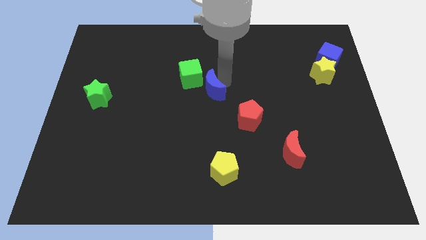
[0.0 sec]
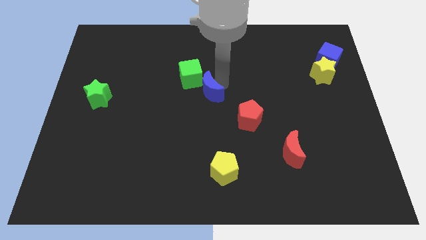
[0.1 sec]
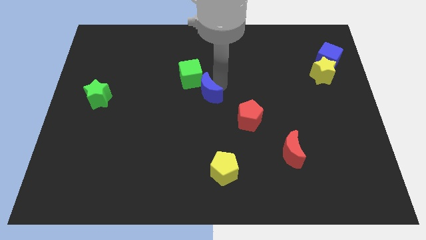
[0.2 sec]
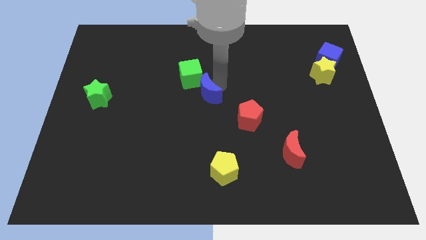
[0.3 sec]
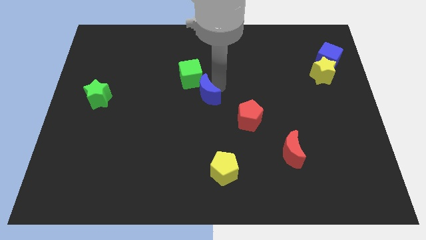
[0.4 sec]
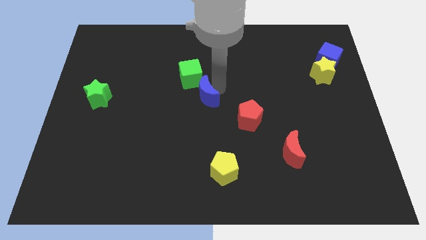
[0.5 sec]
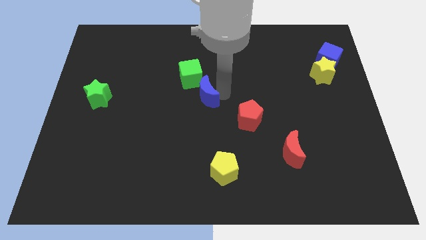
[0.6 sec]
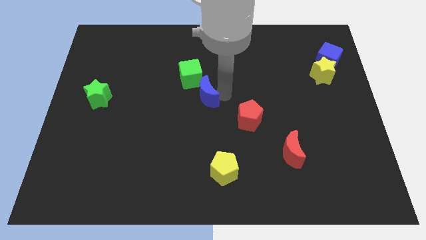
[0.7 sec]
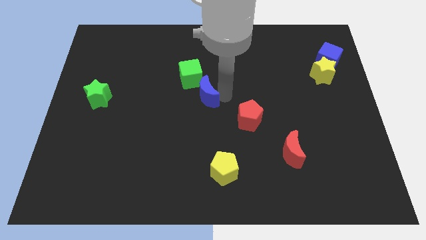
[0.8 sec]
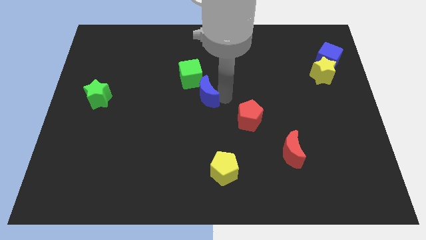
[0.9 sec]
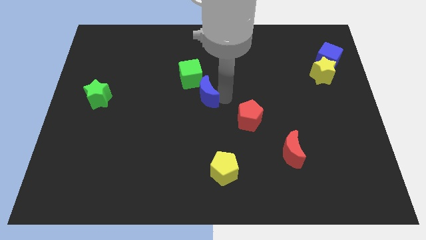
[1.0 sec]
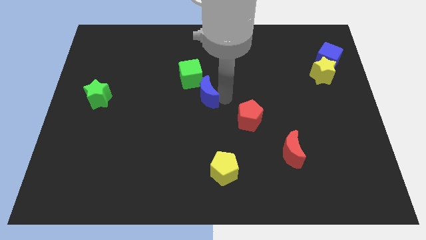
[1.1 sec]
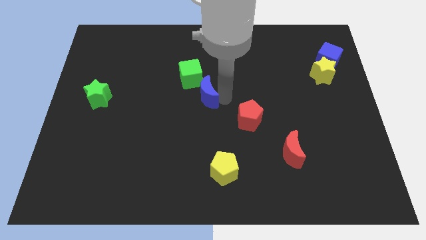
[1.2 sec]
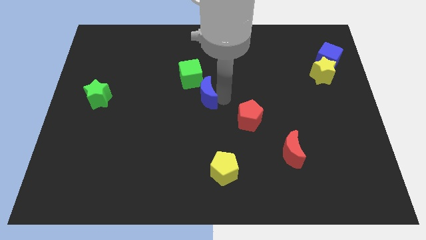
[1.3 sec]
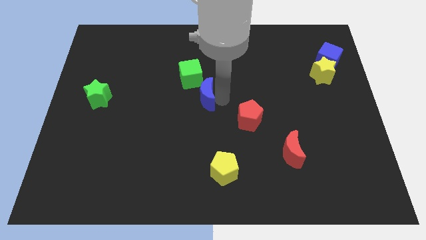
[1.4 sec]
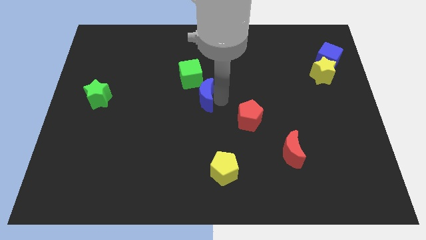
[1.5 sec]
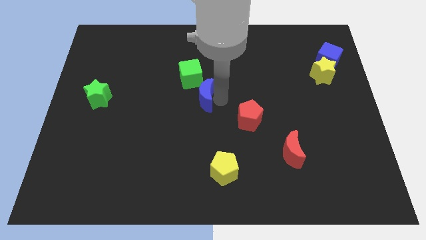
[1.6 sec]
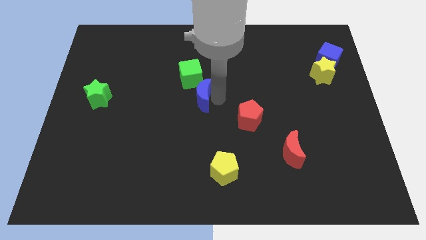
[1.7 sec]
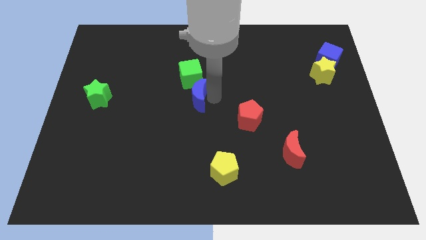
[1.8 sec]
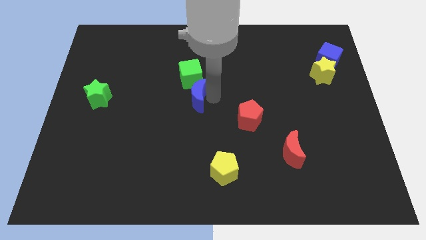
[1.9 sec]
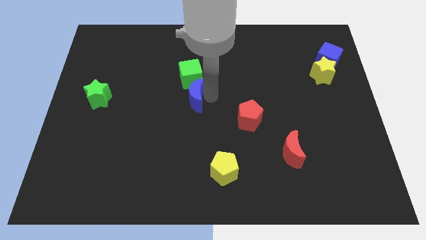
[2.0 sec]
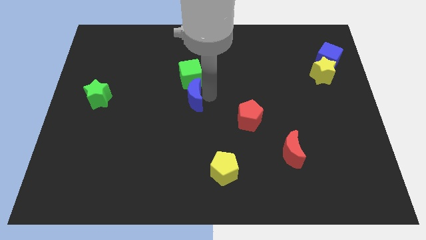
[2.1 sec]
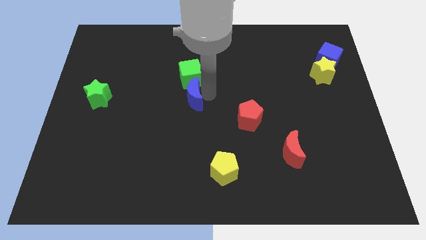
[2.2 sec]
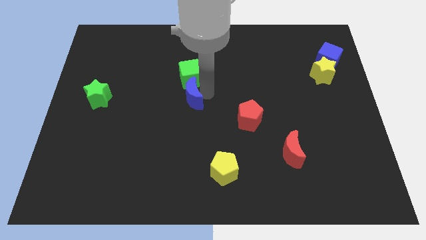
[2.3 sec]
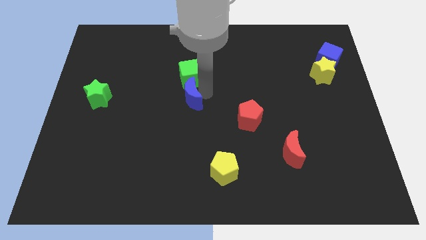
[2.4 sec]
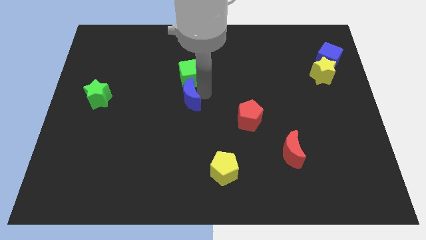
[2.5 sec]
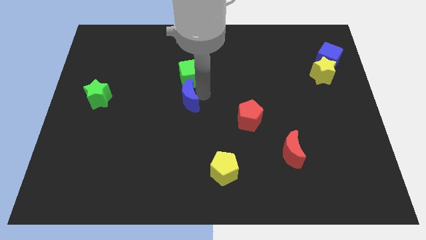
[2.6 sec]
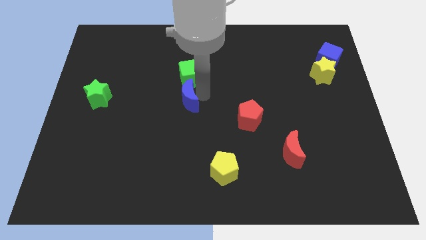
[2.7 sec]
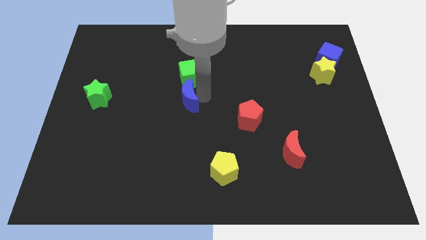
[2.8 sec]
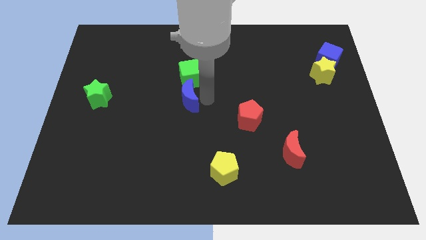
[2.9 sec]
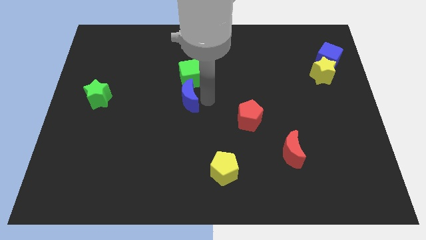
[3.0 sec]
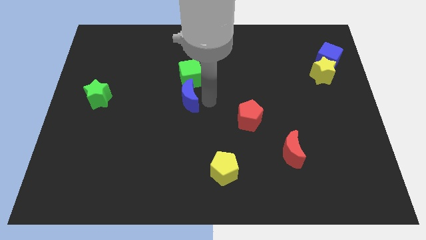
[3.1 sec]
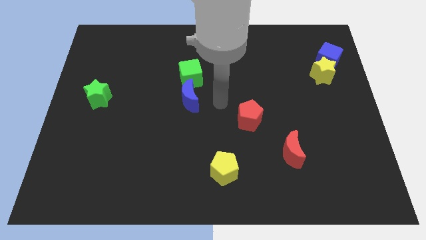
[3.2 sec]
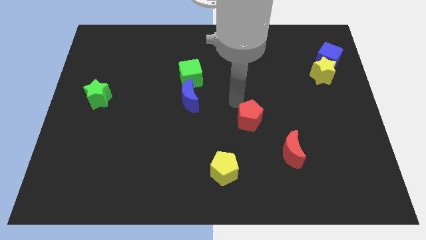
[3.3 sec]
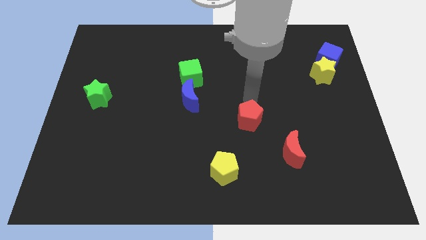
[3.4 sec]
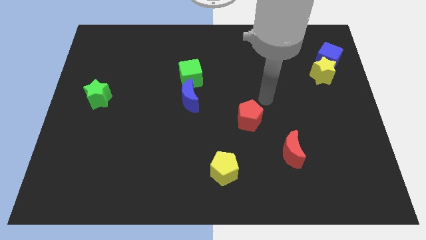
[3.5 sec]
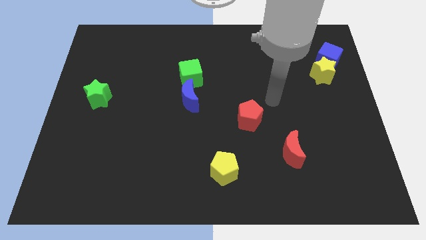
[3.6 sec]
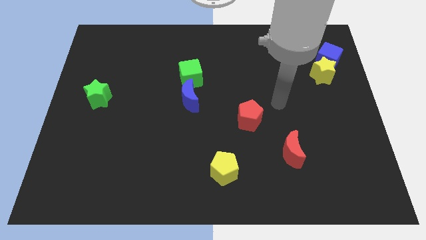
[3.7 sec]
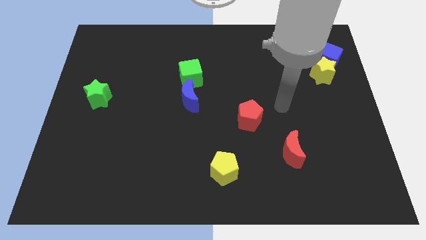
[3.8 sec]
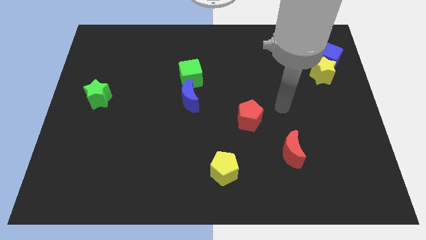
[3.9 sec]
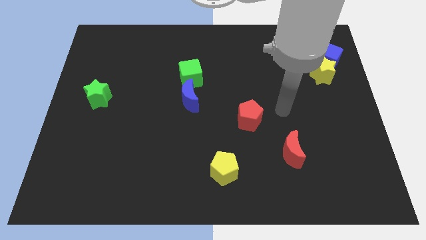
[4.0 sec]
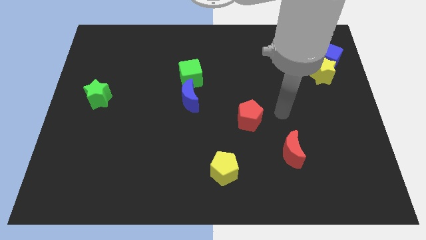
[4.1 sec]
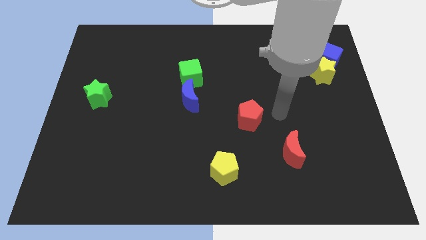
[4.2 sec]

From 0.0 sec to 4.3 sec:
place blue crescent below the green cube

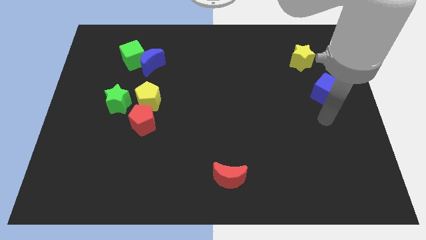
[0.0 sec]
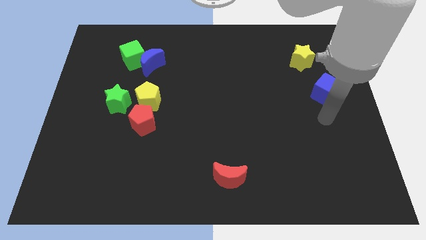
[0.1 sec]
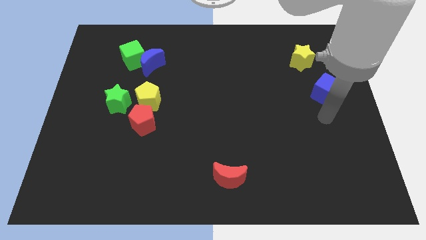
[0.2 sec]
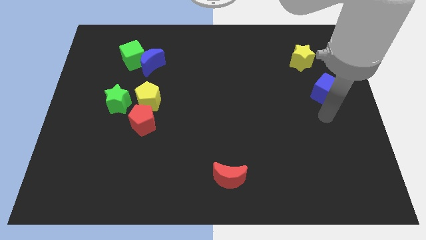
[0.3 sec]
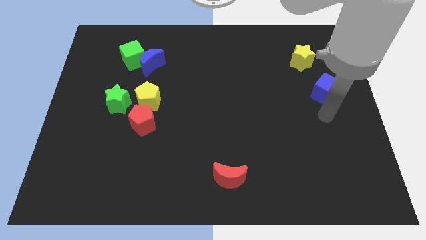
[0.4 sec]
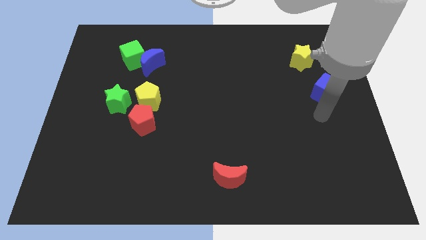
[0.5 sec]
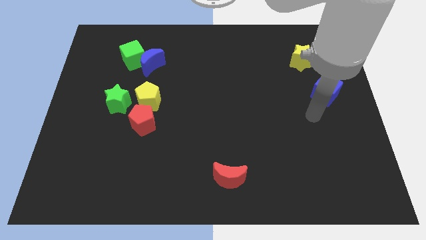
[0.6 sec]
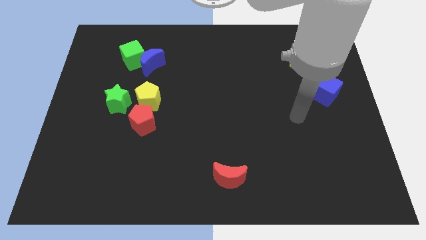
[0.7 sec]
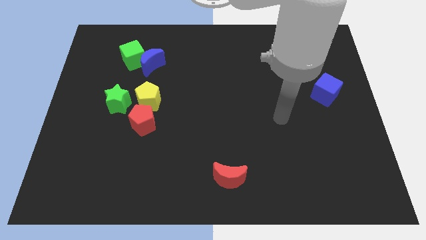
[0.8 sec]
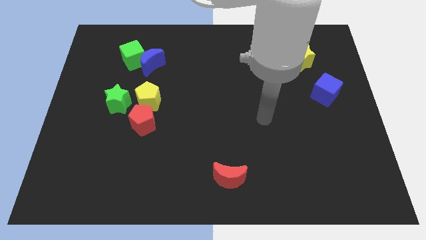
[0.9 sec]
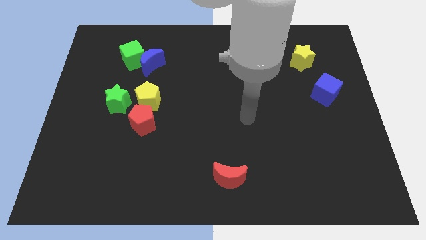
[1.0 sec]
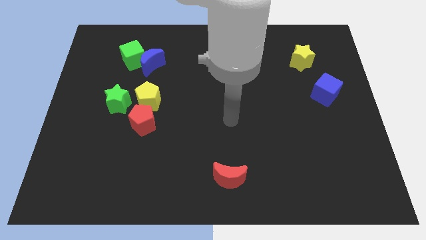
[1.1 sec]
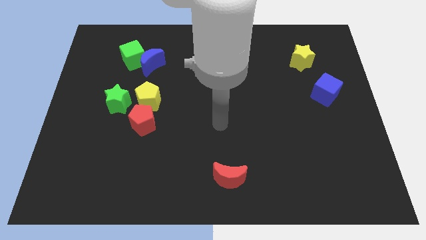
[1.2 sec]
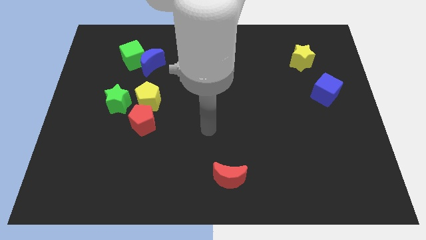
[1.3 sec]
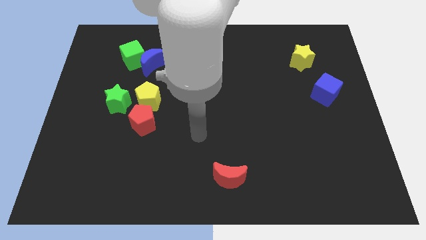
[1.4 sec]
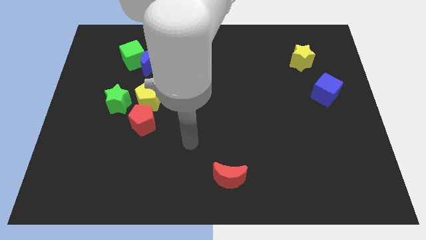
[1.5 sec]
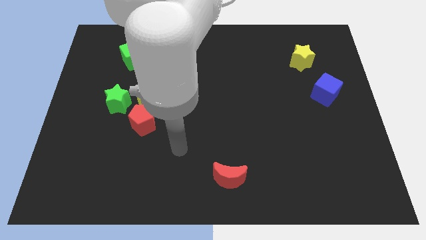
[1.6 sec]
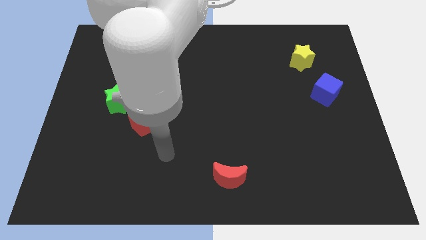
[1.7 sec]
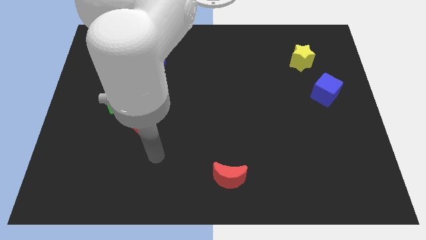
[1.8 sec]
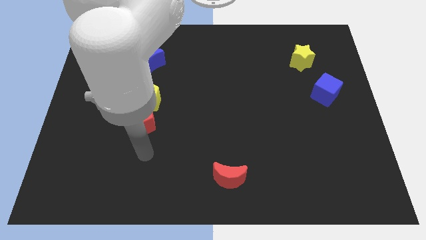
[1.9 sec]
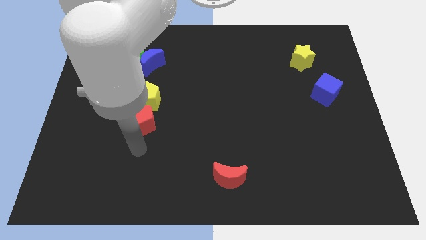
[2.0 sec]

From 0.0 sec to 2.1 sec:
point your hand at the bottom side of the red pentagon

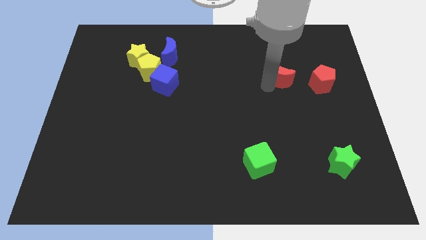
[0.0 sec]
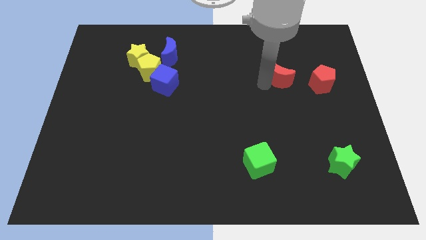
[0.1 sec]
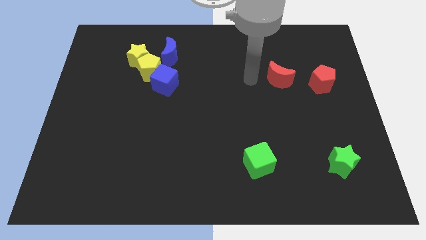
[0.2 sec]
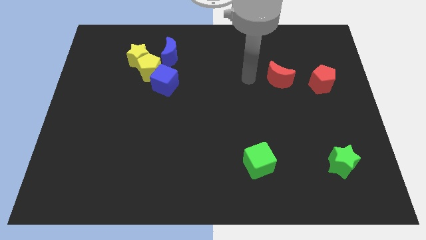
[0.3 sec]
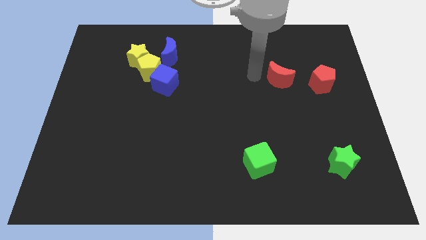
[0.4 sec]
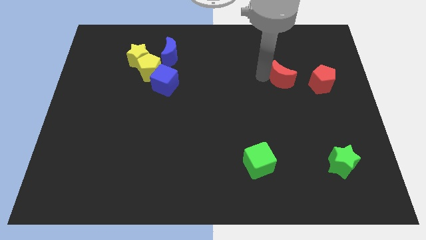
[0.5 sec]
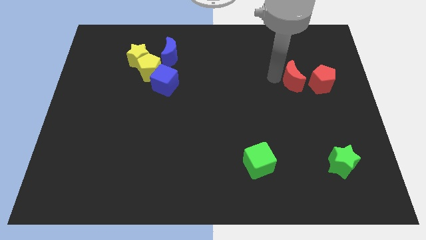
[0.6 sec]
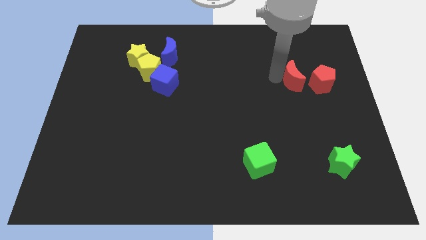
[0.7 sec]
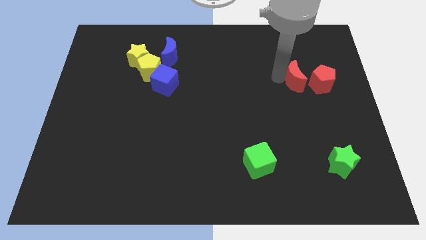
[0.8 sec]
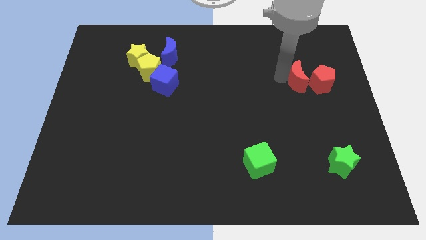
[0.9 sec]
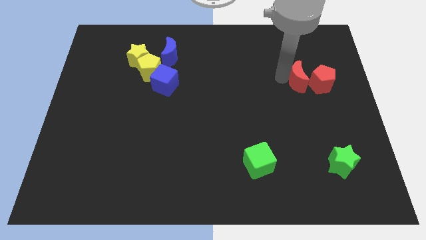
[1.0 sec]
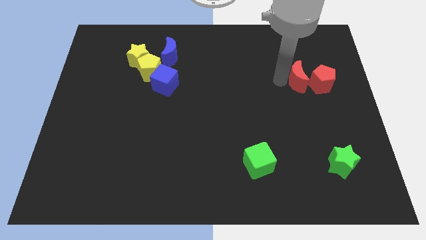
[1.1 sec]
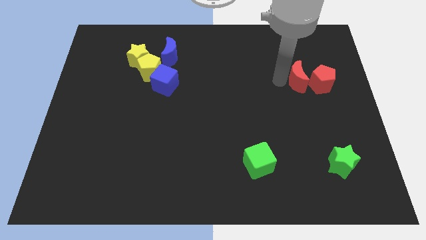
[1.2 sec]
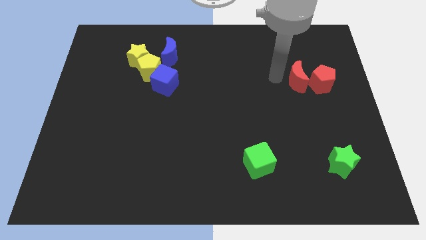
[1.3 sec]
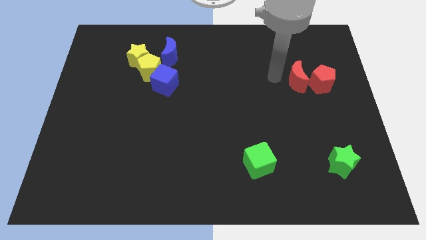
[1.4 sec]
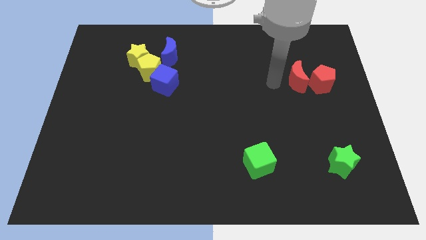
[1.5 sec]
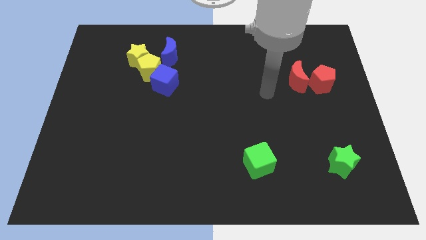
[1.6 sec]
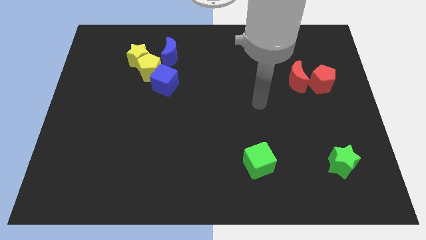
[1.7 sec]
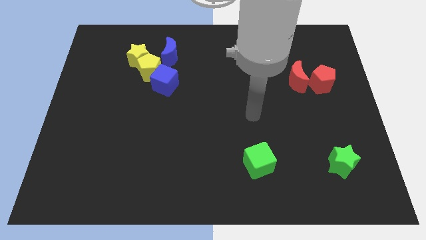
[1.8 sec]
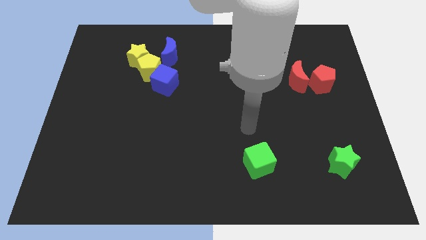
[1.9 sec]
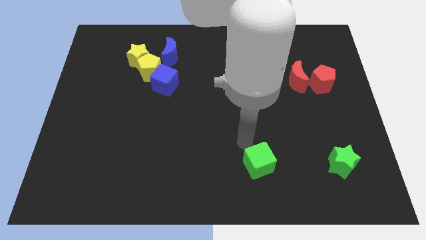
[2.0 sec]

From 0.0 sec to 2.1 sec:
place the red crescent towards the left side of the red pentagon

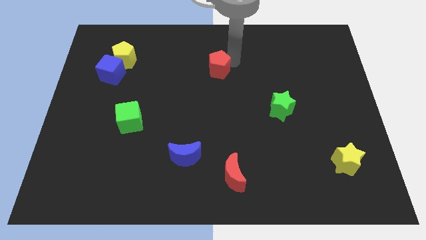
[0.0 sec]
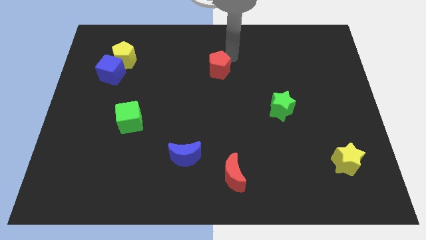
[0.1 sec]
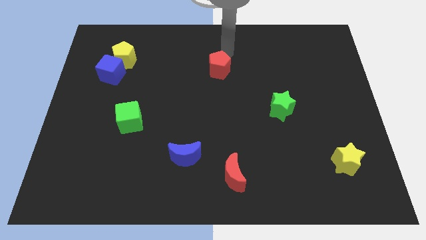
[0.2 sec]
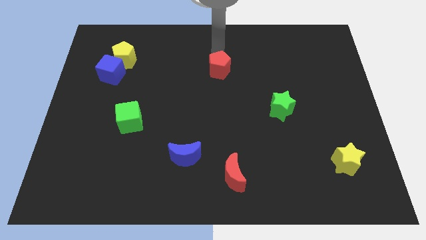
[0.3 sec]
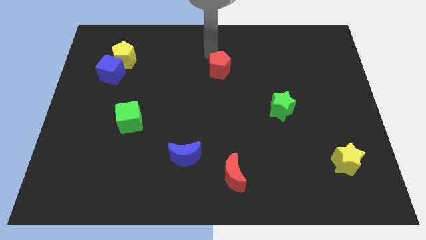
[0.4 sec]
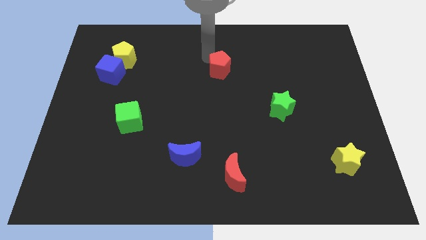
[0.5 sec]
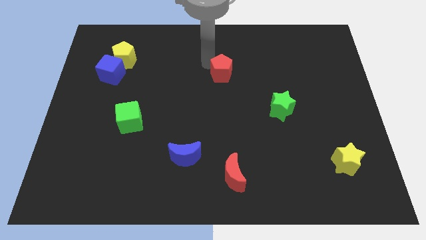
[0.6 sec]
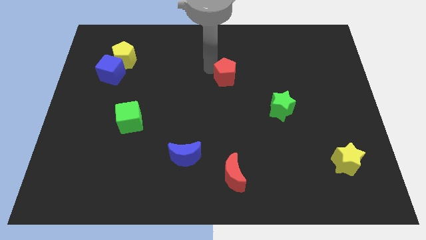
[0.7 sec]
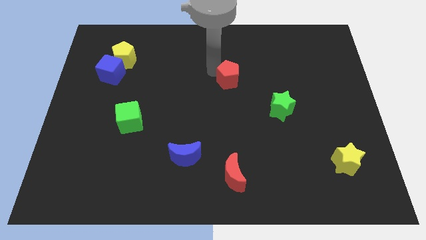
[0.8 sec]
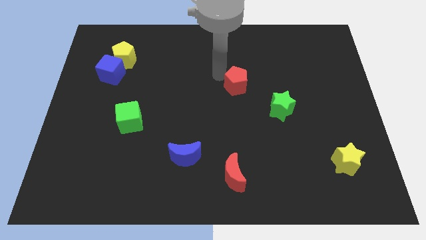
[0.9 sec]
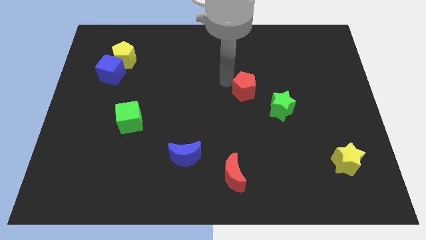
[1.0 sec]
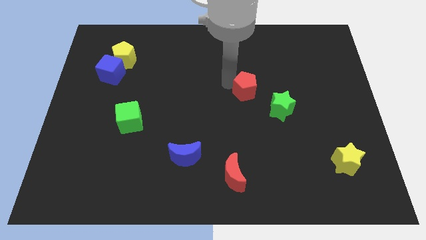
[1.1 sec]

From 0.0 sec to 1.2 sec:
place red pentagon to the top right of green star
